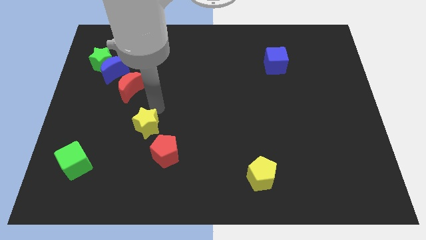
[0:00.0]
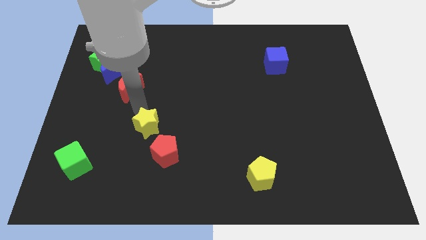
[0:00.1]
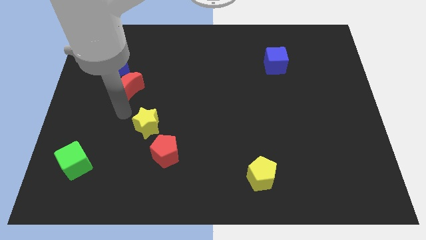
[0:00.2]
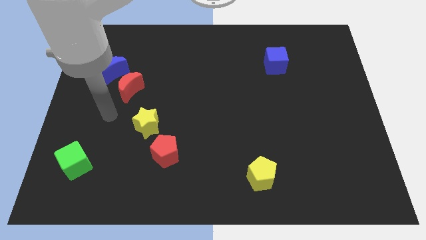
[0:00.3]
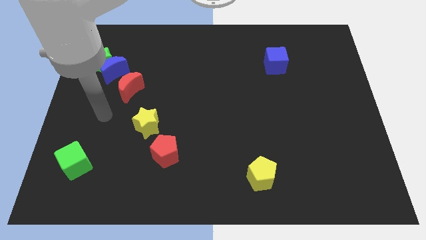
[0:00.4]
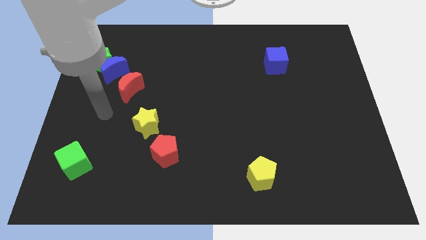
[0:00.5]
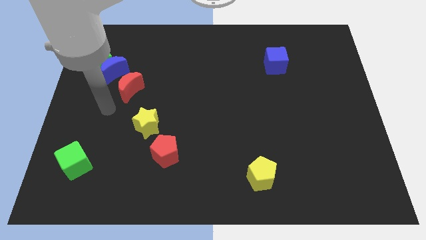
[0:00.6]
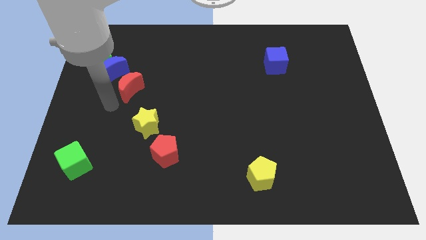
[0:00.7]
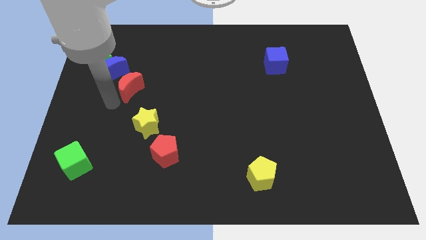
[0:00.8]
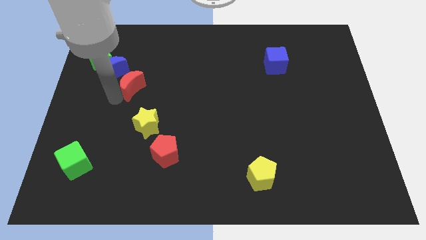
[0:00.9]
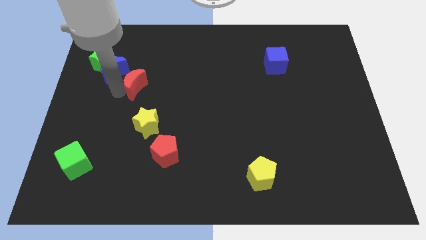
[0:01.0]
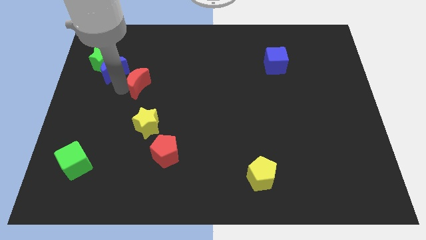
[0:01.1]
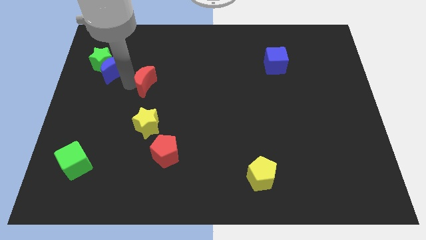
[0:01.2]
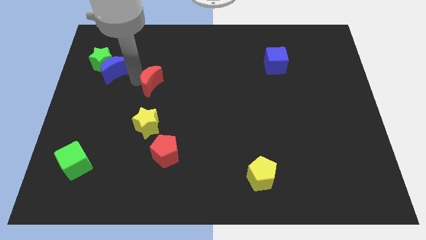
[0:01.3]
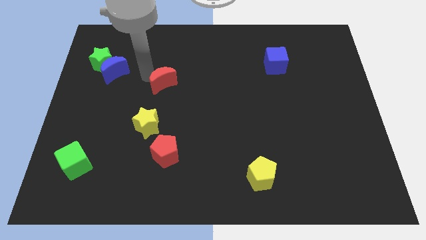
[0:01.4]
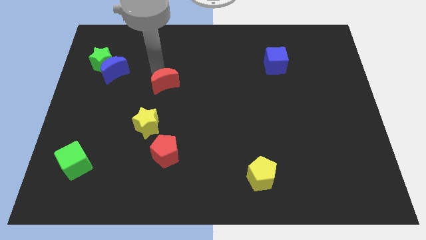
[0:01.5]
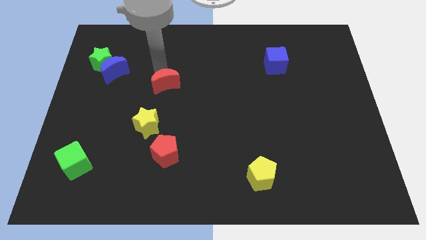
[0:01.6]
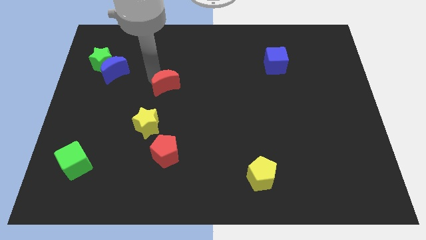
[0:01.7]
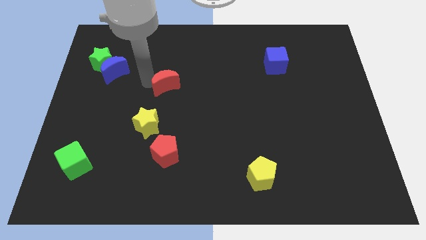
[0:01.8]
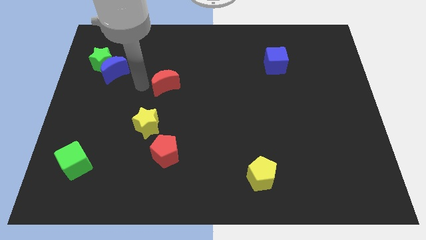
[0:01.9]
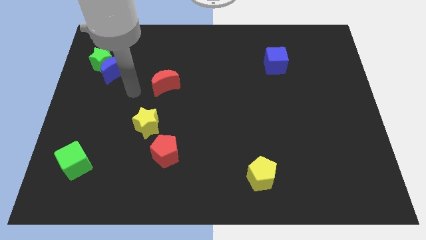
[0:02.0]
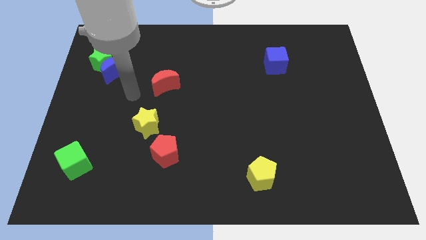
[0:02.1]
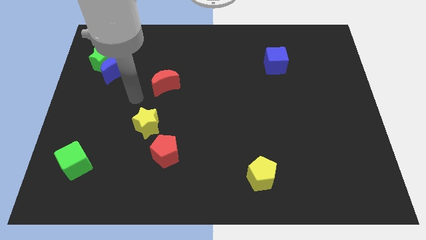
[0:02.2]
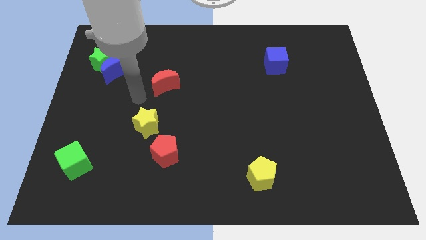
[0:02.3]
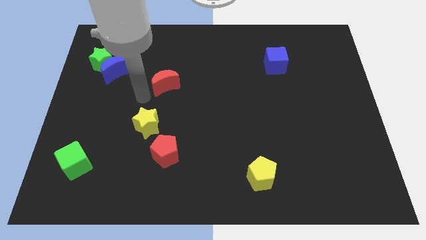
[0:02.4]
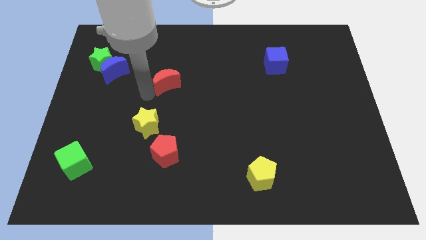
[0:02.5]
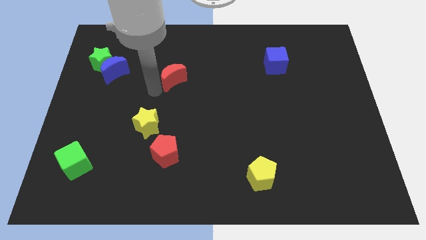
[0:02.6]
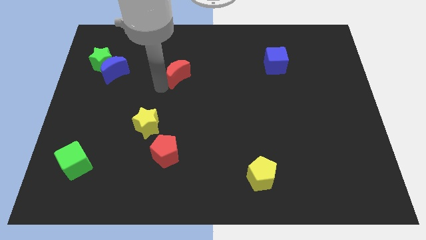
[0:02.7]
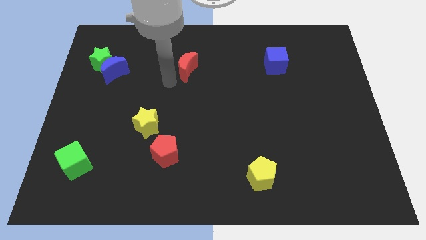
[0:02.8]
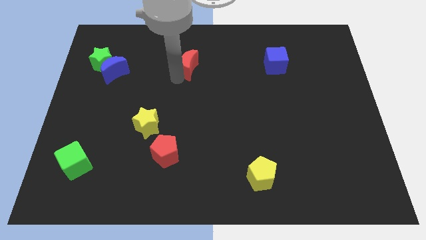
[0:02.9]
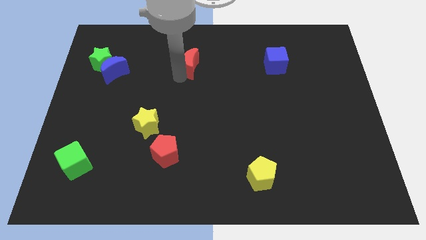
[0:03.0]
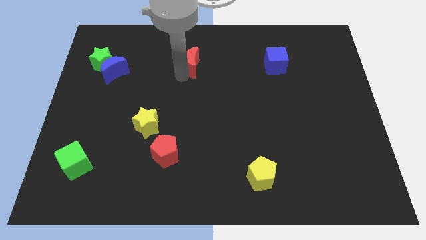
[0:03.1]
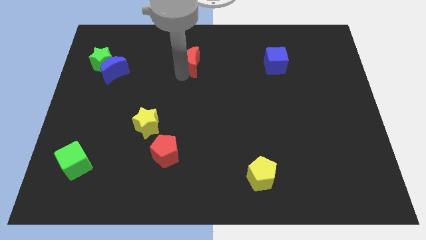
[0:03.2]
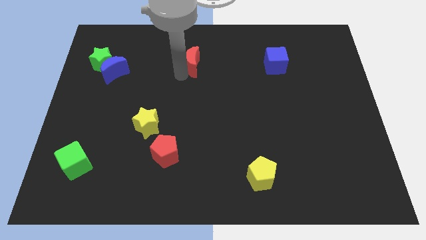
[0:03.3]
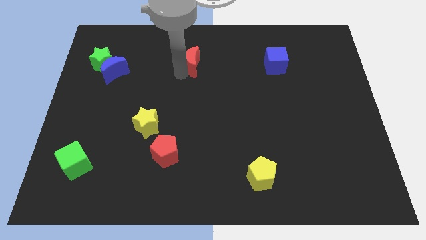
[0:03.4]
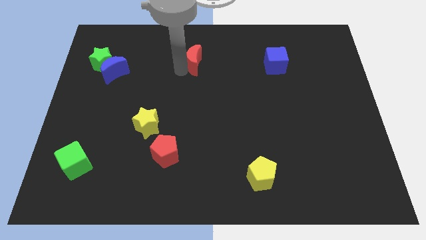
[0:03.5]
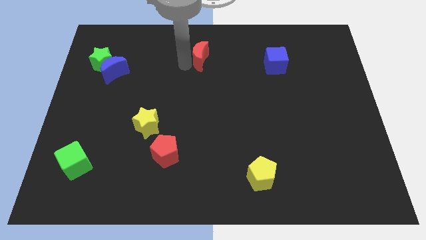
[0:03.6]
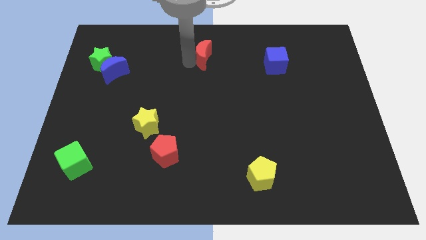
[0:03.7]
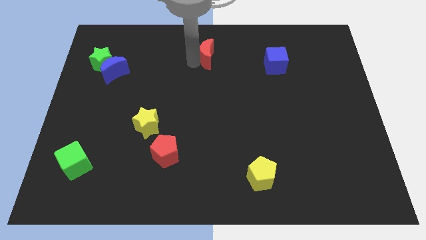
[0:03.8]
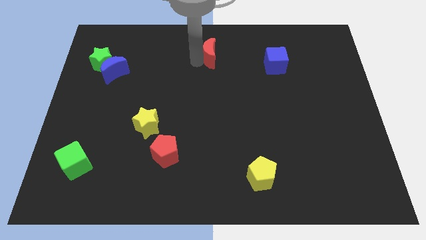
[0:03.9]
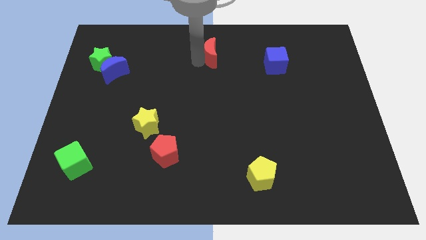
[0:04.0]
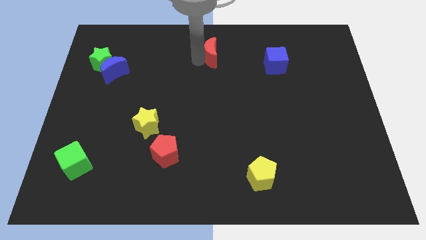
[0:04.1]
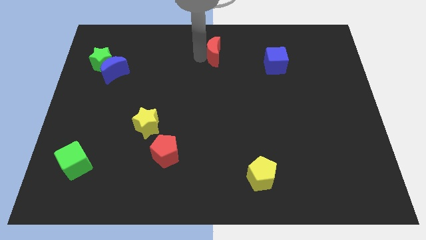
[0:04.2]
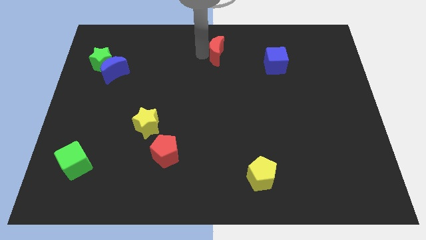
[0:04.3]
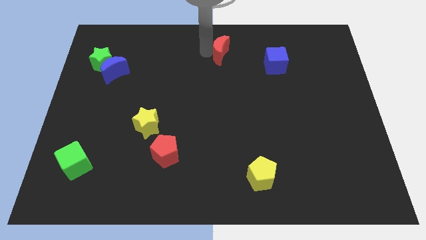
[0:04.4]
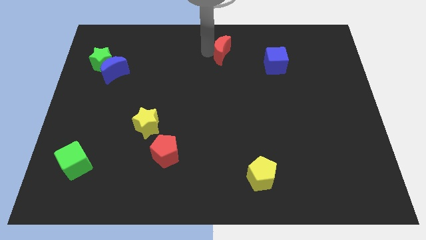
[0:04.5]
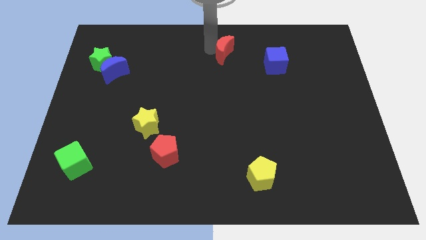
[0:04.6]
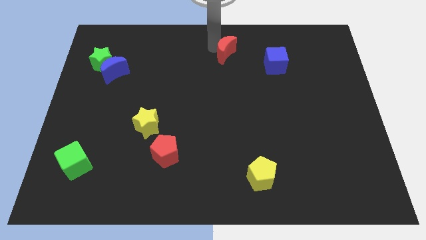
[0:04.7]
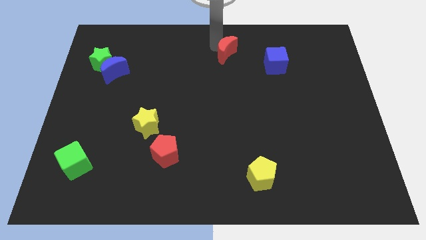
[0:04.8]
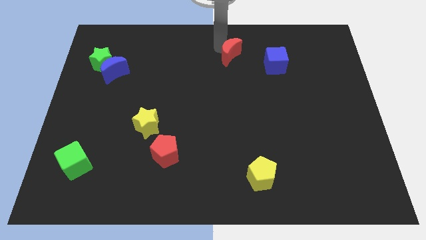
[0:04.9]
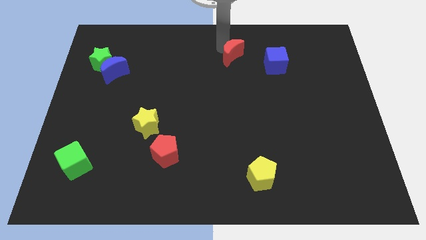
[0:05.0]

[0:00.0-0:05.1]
place red moon to top left of blue cube

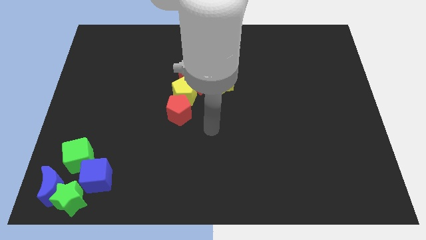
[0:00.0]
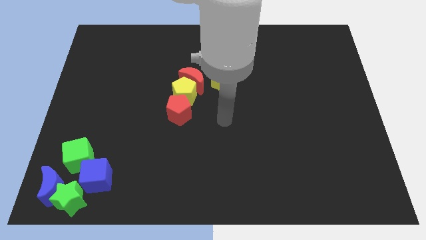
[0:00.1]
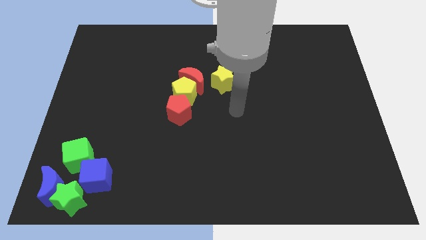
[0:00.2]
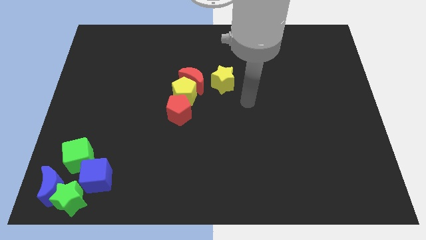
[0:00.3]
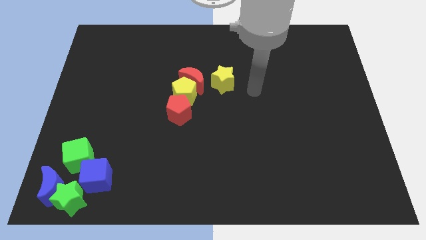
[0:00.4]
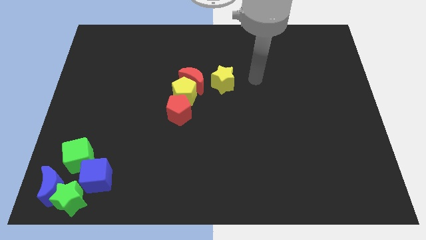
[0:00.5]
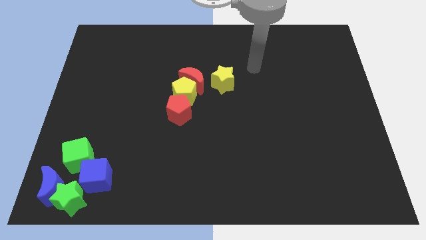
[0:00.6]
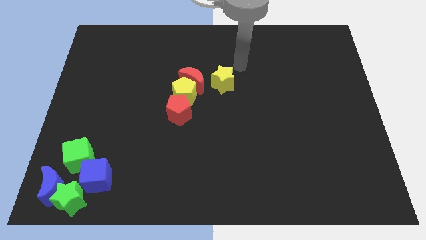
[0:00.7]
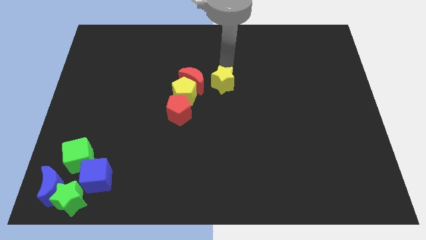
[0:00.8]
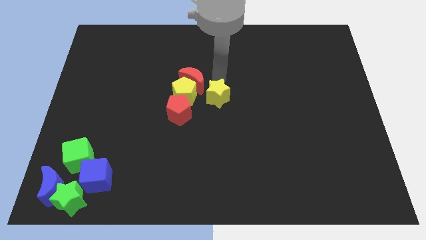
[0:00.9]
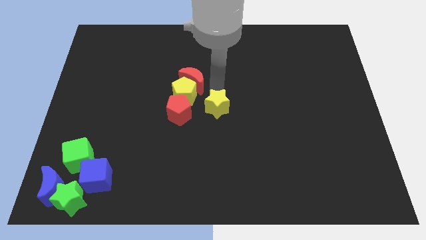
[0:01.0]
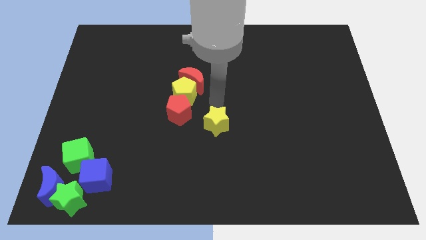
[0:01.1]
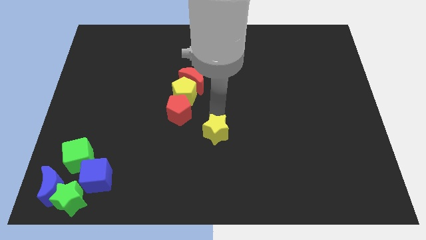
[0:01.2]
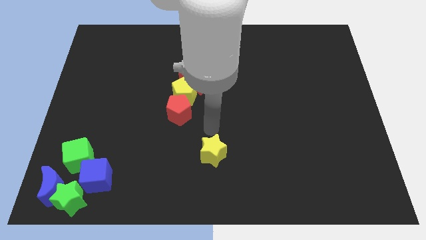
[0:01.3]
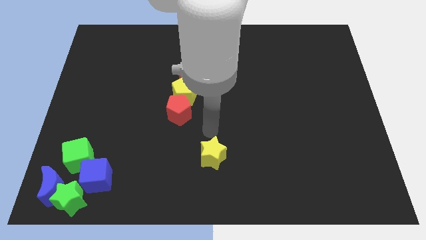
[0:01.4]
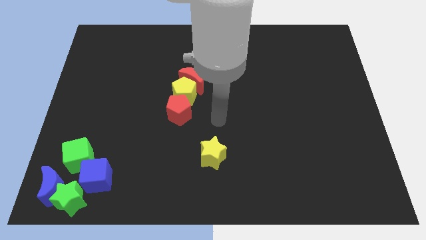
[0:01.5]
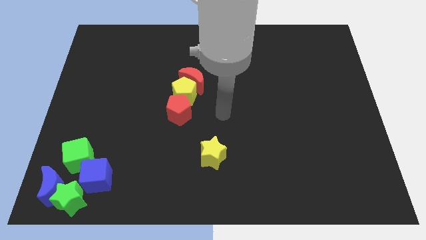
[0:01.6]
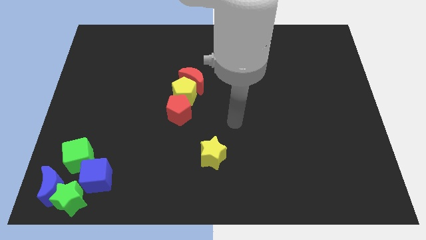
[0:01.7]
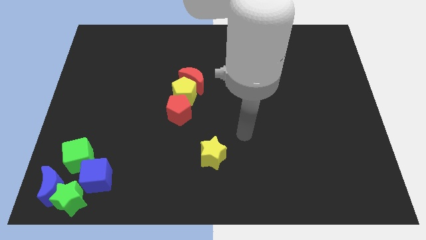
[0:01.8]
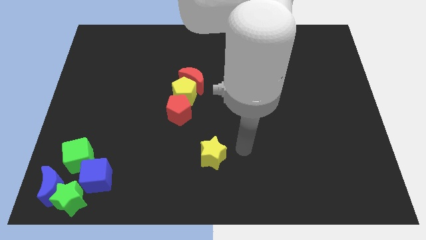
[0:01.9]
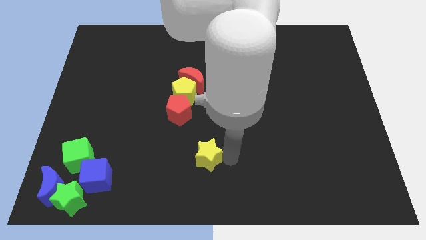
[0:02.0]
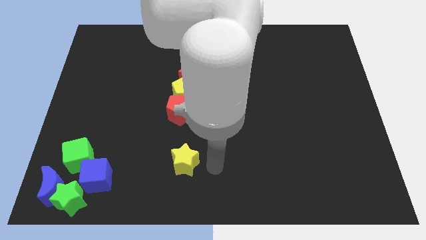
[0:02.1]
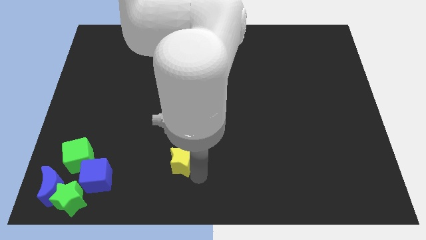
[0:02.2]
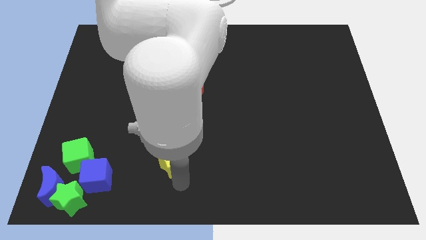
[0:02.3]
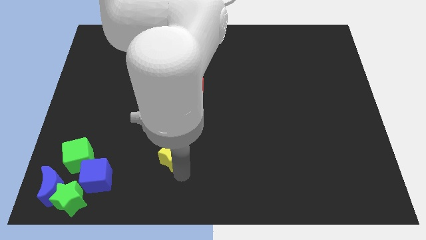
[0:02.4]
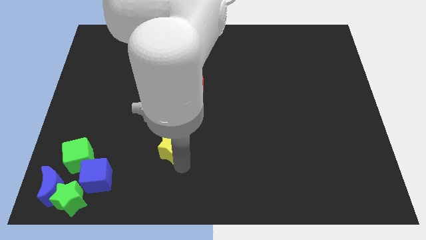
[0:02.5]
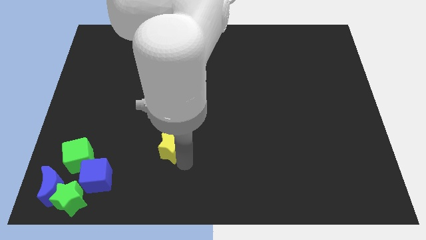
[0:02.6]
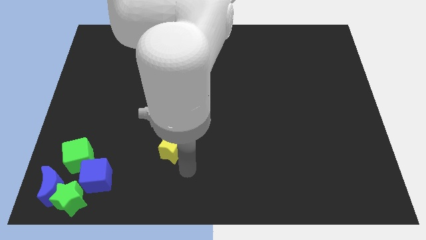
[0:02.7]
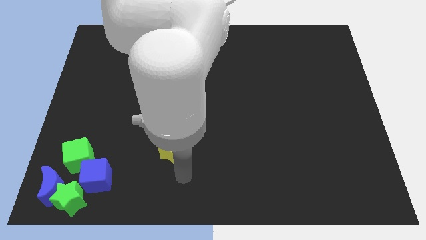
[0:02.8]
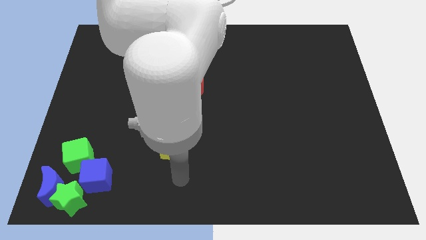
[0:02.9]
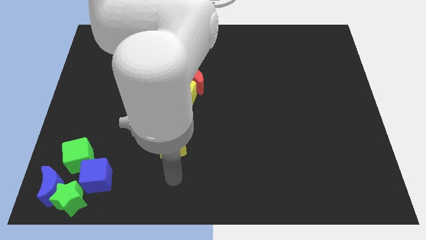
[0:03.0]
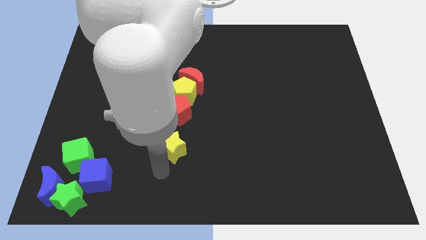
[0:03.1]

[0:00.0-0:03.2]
place the yellow star at the bottom of the red pentagon vertically

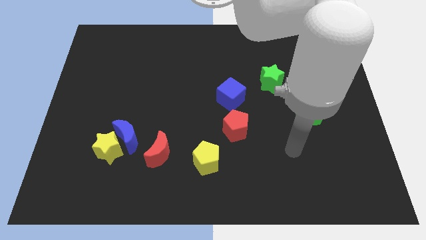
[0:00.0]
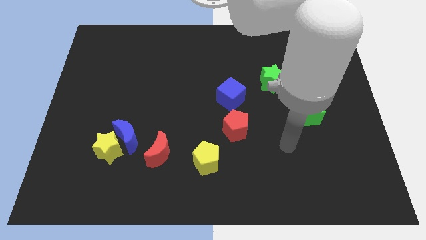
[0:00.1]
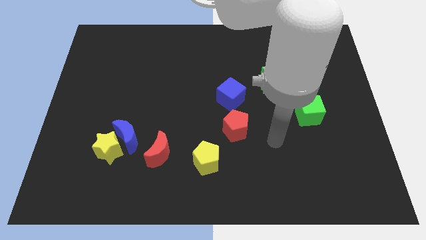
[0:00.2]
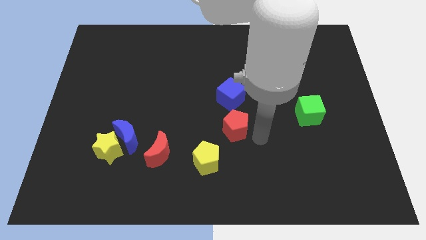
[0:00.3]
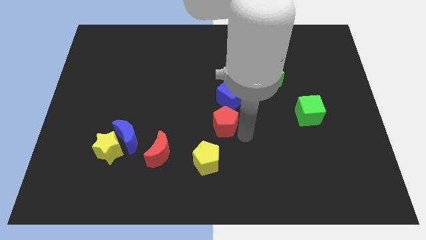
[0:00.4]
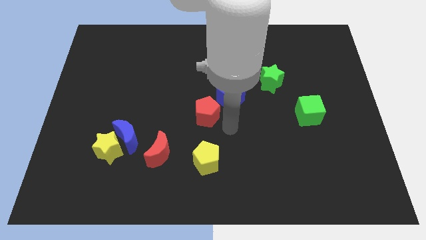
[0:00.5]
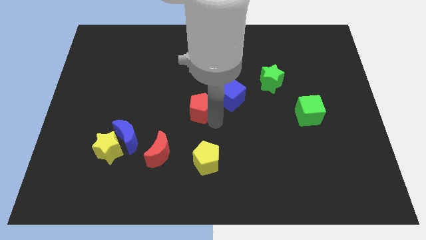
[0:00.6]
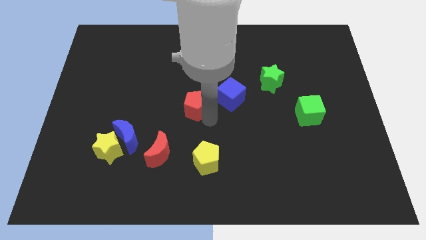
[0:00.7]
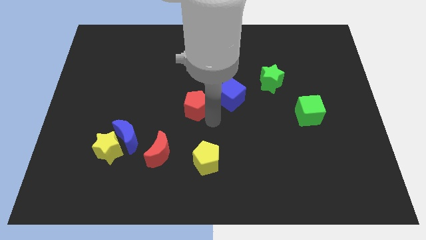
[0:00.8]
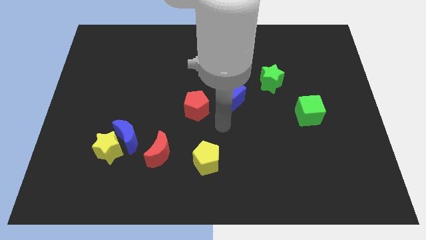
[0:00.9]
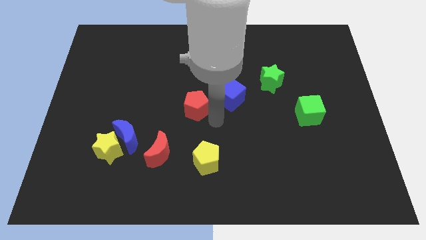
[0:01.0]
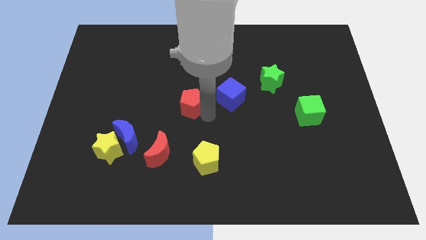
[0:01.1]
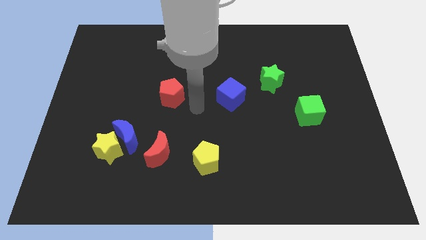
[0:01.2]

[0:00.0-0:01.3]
move the red pentagon to the horizontal left side of the blue cube
